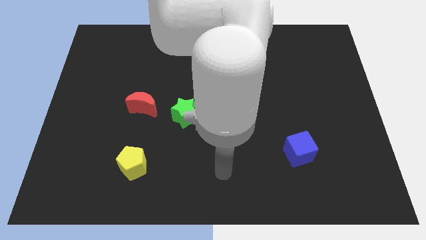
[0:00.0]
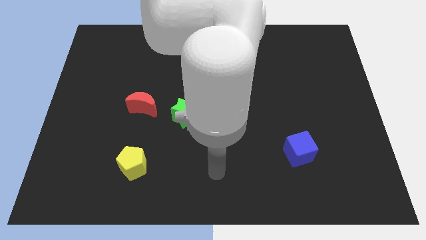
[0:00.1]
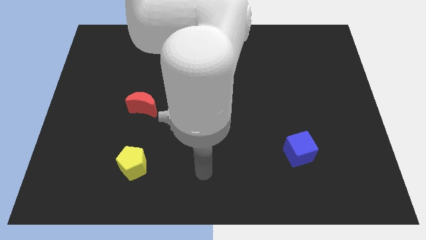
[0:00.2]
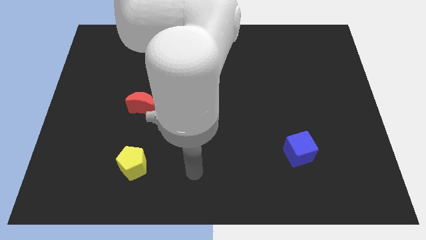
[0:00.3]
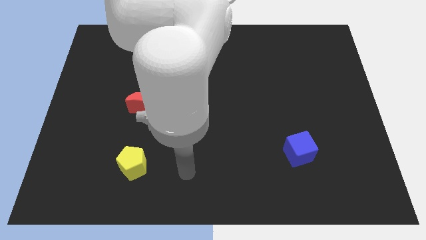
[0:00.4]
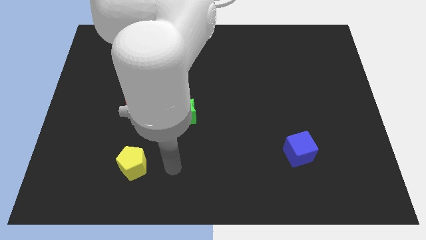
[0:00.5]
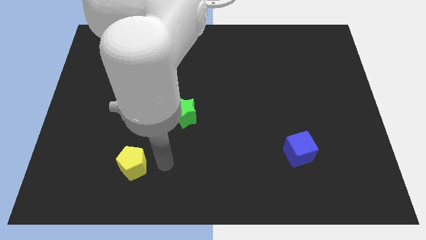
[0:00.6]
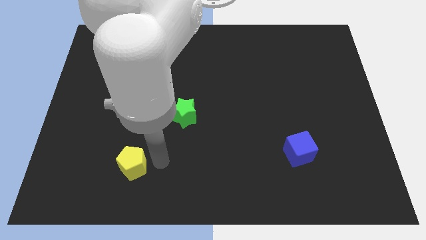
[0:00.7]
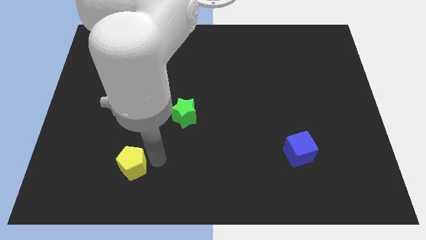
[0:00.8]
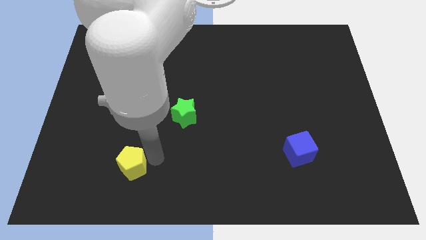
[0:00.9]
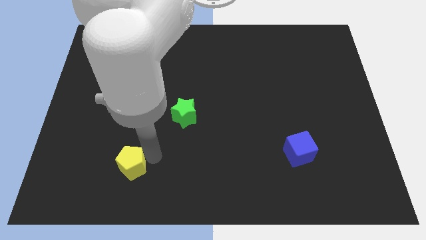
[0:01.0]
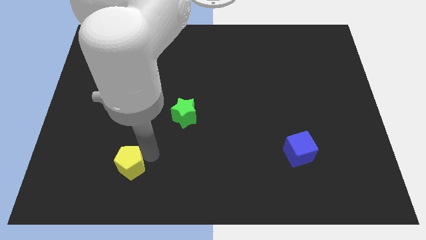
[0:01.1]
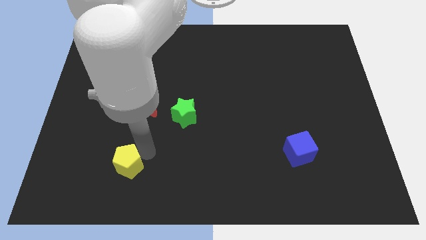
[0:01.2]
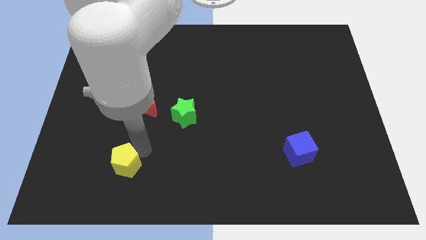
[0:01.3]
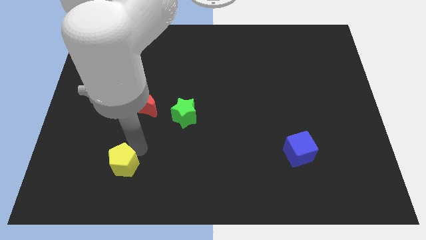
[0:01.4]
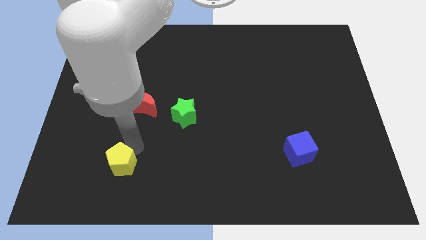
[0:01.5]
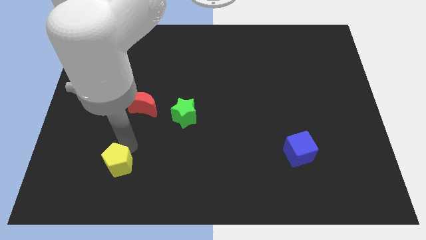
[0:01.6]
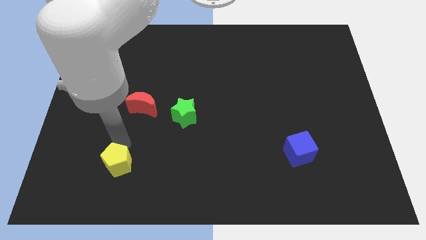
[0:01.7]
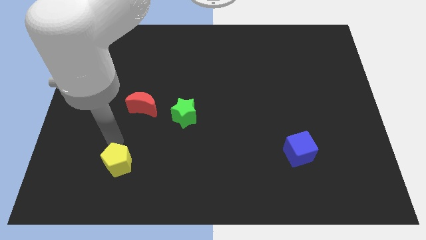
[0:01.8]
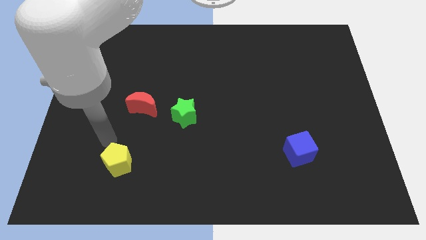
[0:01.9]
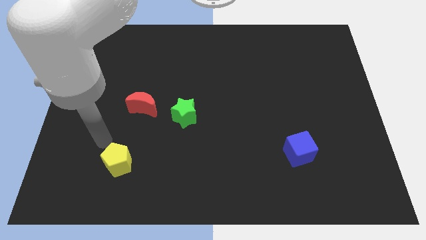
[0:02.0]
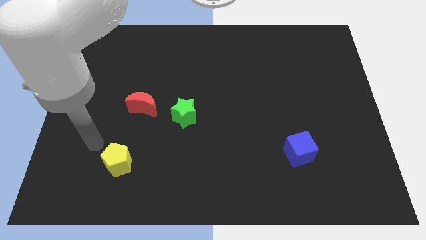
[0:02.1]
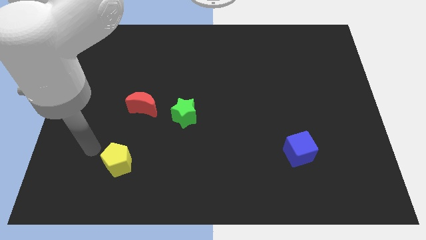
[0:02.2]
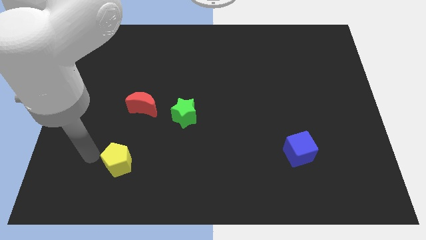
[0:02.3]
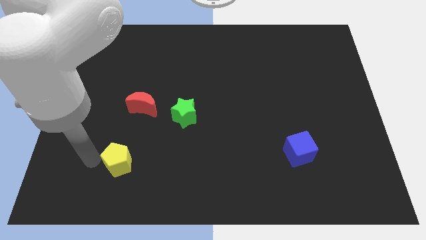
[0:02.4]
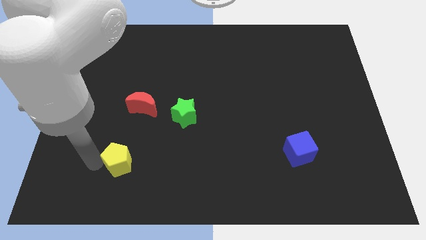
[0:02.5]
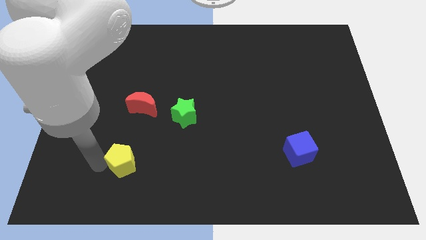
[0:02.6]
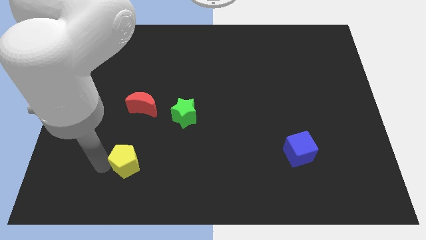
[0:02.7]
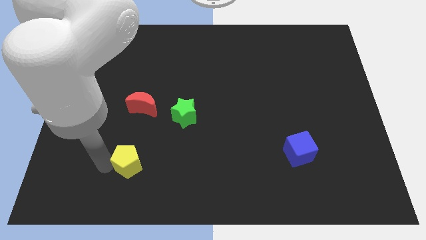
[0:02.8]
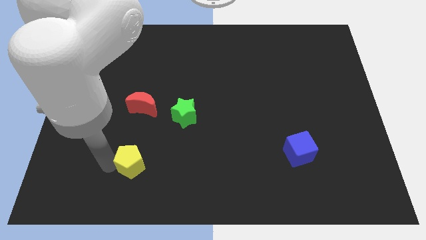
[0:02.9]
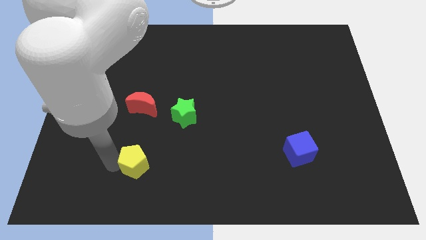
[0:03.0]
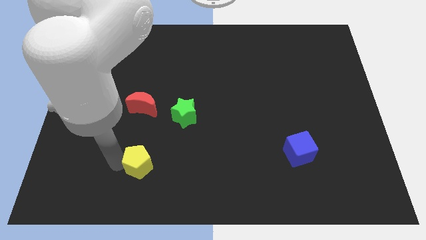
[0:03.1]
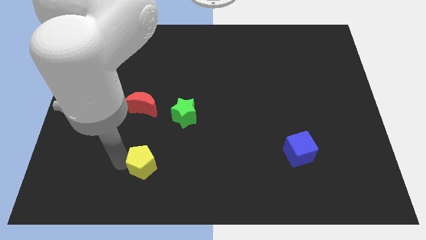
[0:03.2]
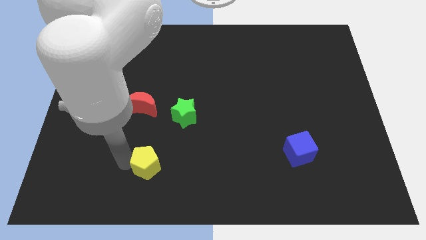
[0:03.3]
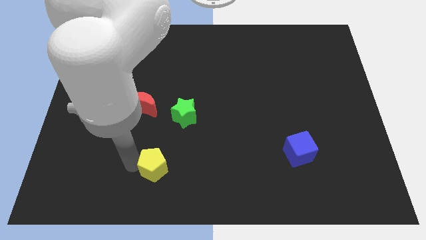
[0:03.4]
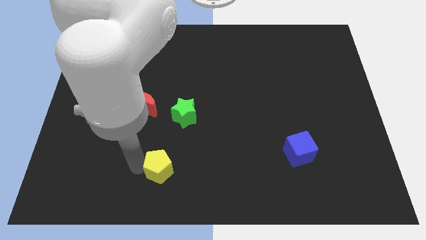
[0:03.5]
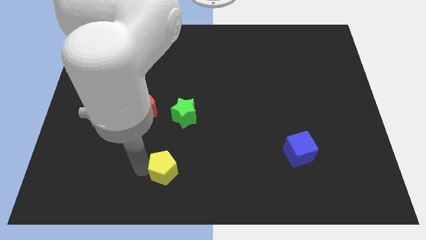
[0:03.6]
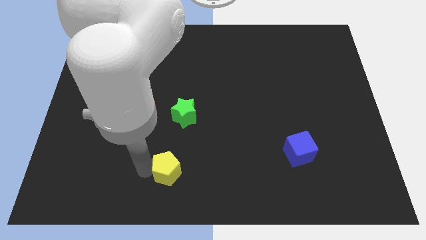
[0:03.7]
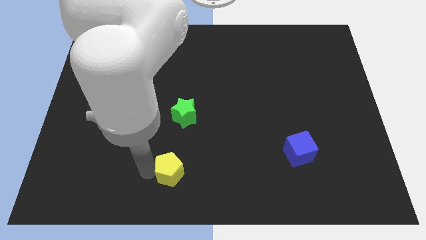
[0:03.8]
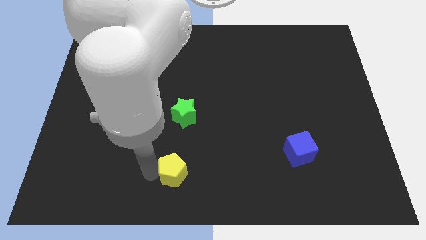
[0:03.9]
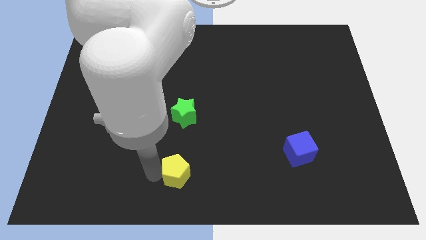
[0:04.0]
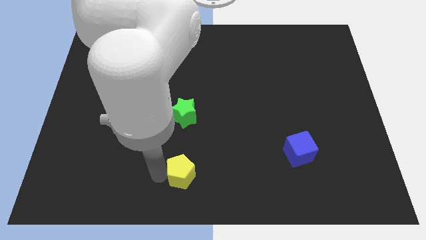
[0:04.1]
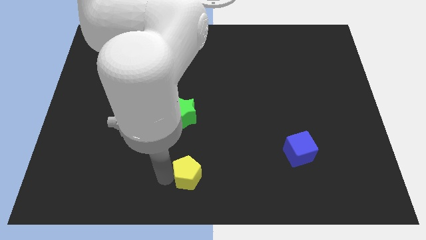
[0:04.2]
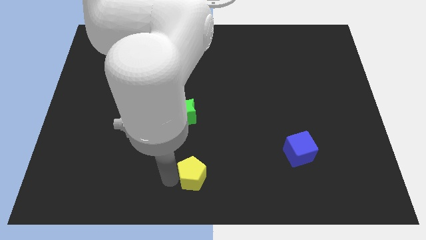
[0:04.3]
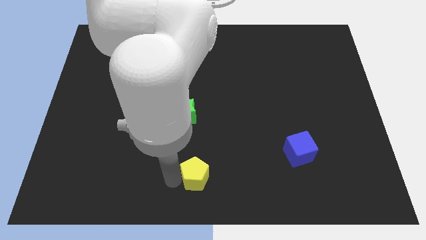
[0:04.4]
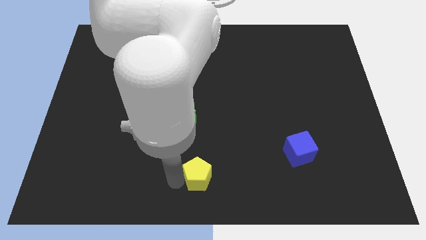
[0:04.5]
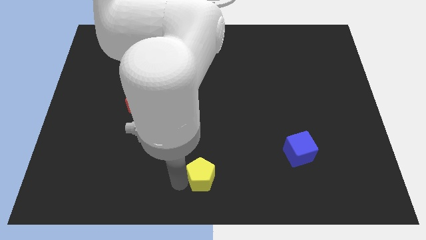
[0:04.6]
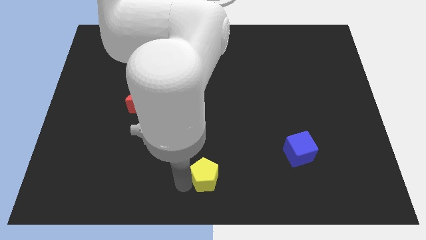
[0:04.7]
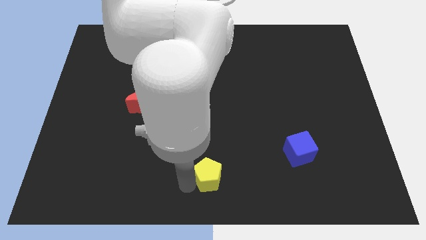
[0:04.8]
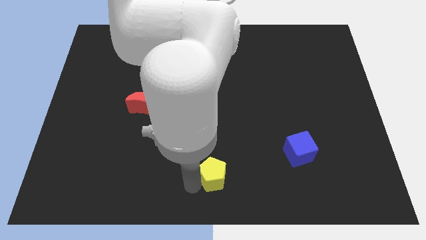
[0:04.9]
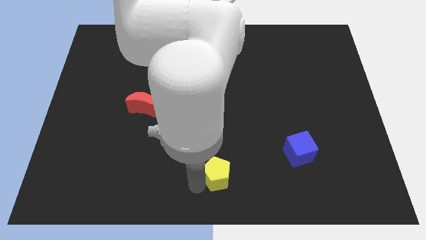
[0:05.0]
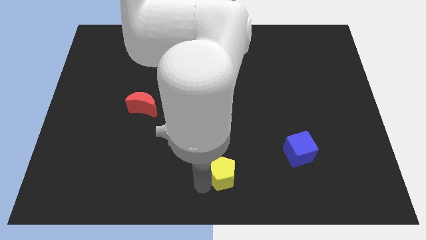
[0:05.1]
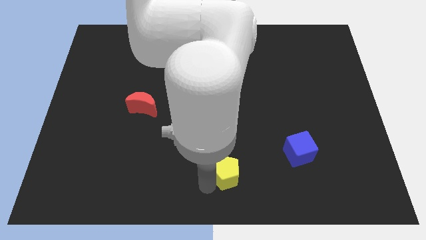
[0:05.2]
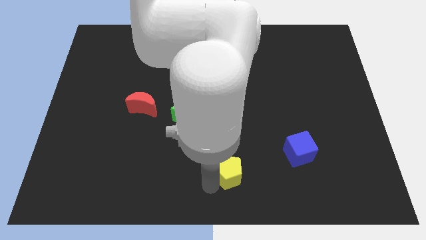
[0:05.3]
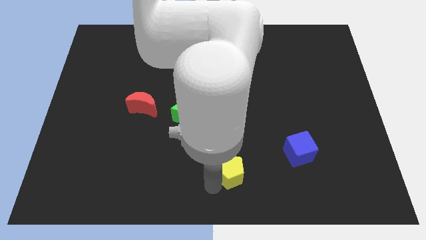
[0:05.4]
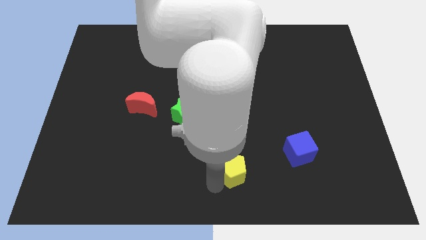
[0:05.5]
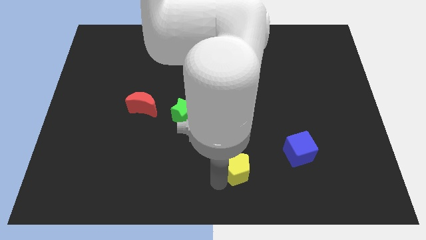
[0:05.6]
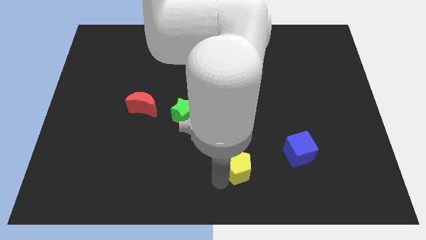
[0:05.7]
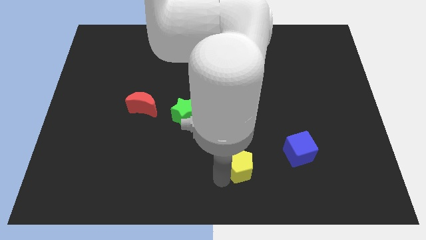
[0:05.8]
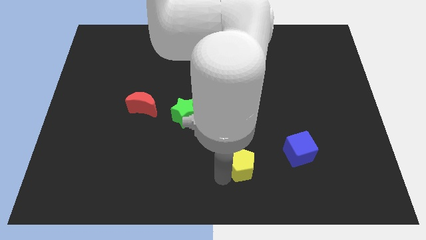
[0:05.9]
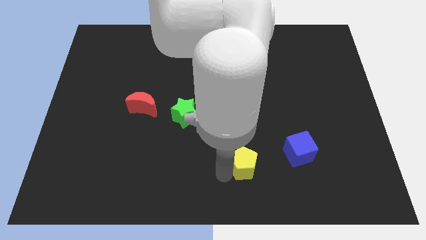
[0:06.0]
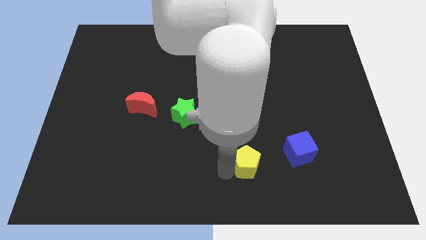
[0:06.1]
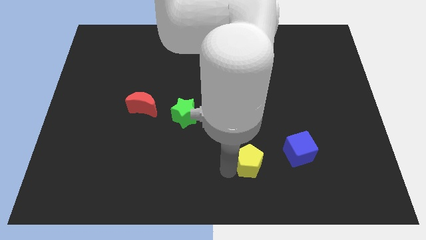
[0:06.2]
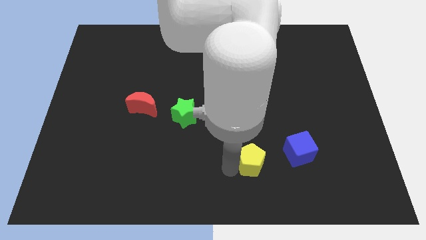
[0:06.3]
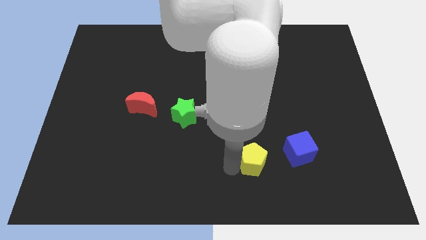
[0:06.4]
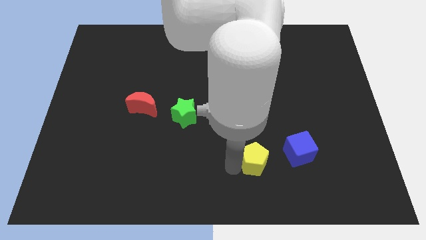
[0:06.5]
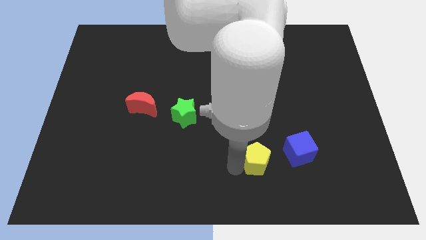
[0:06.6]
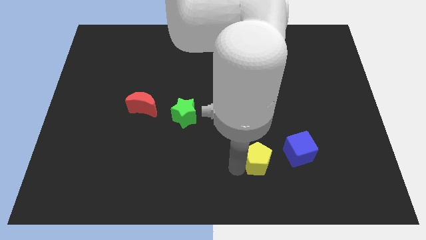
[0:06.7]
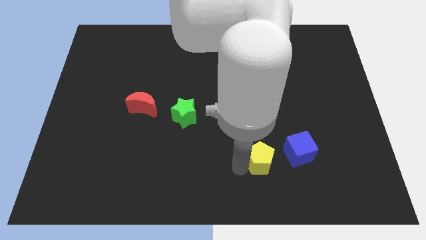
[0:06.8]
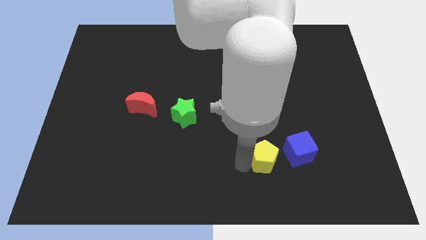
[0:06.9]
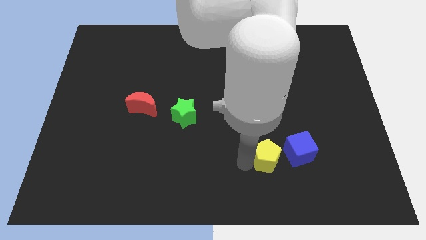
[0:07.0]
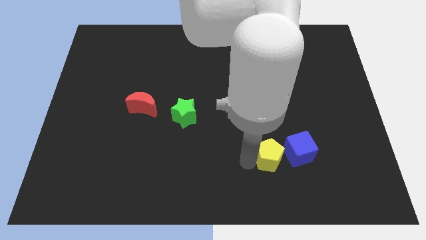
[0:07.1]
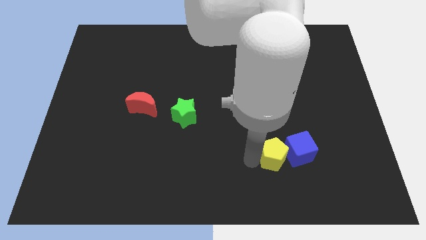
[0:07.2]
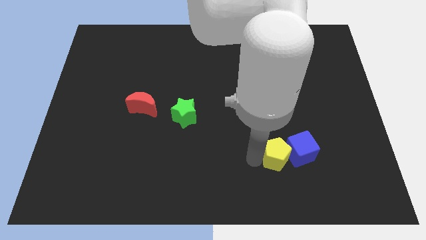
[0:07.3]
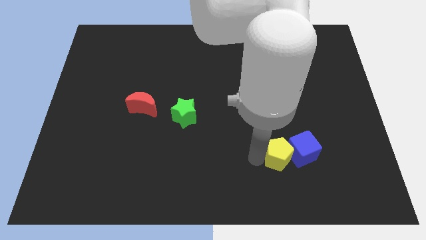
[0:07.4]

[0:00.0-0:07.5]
slide the yellow block towards the blue cube

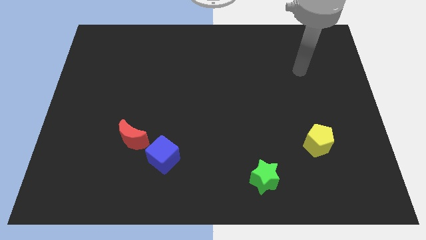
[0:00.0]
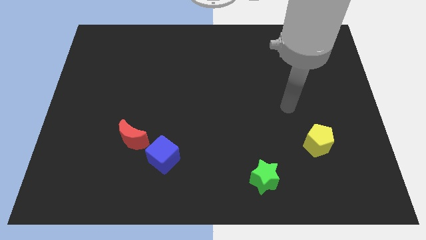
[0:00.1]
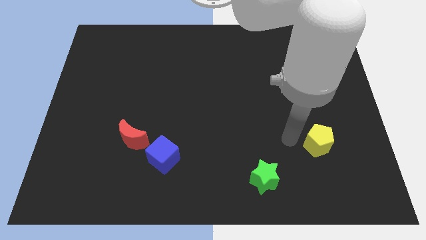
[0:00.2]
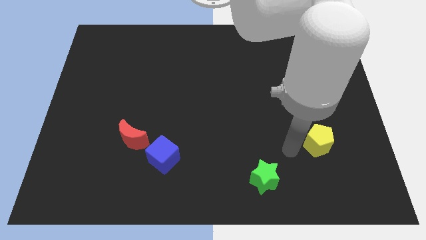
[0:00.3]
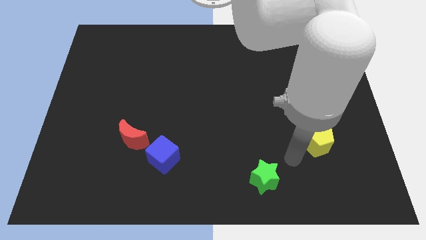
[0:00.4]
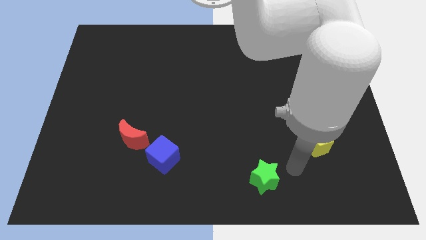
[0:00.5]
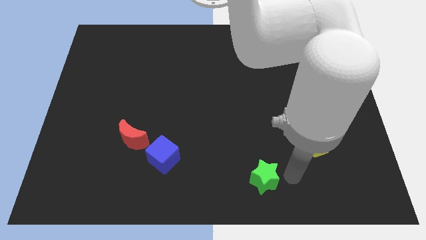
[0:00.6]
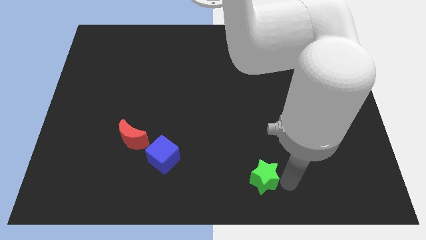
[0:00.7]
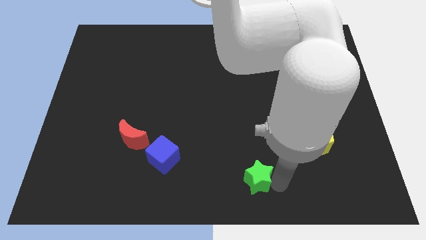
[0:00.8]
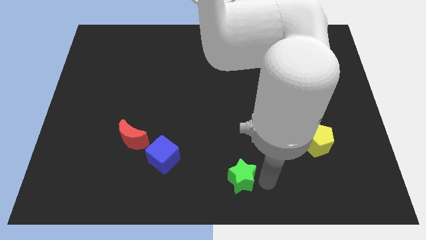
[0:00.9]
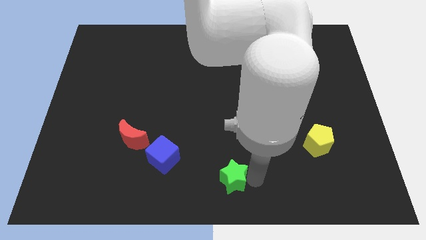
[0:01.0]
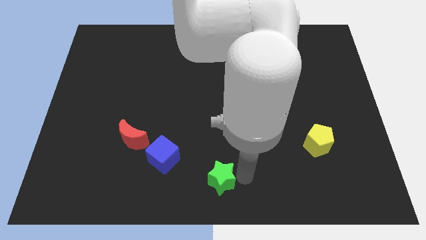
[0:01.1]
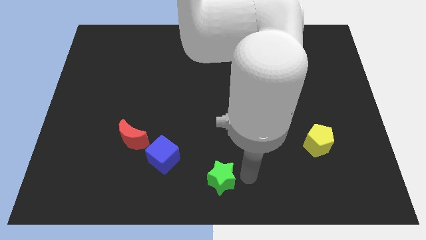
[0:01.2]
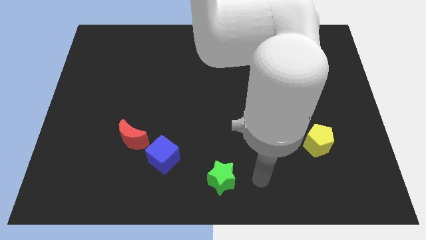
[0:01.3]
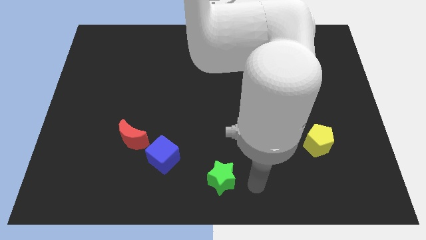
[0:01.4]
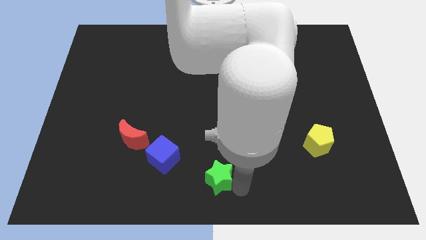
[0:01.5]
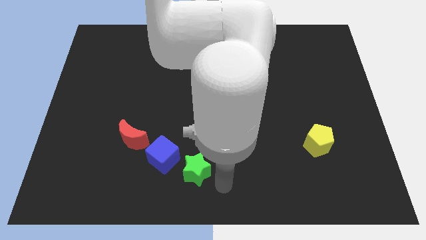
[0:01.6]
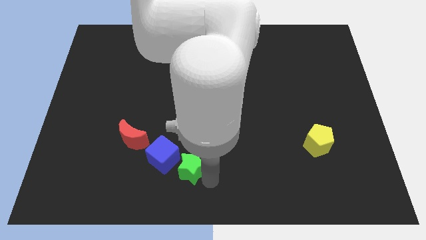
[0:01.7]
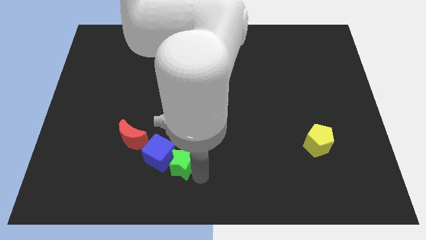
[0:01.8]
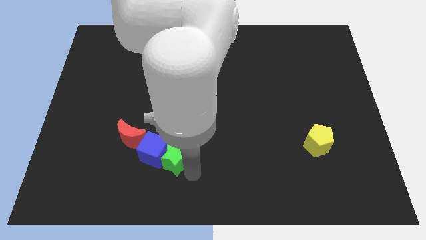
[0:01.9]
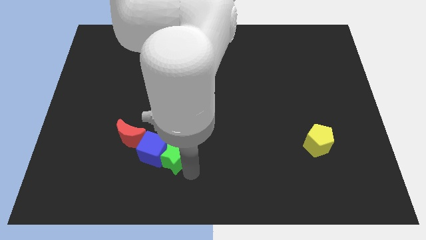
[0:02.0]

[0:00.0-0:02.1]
put the green star next to the cube
